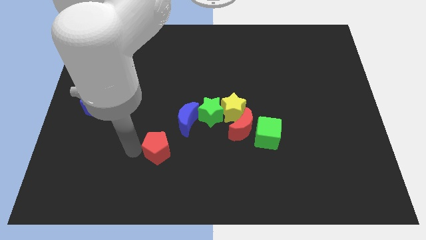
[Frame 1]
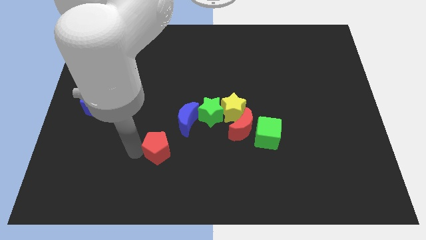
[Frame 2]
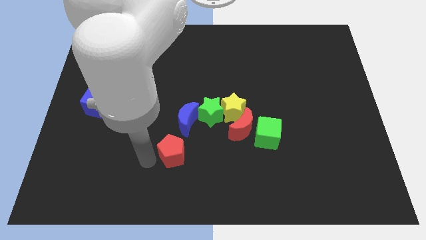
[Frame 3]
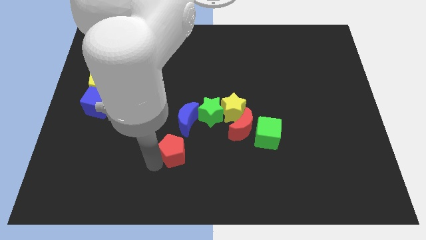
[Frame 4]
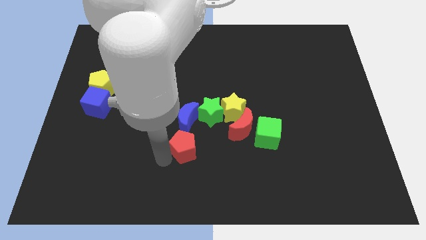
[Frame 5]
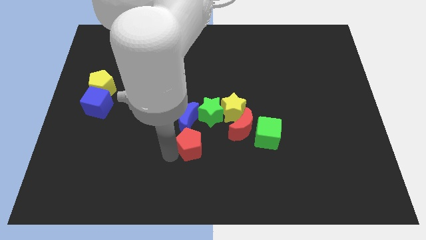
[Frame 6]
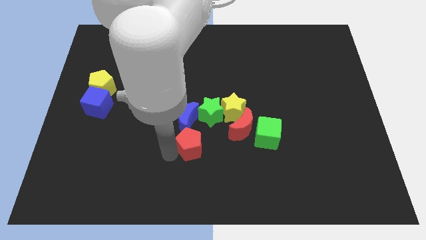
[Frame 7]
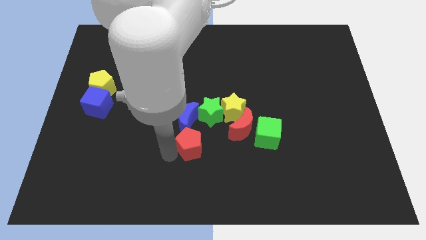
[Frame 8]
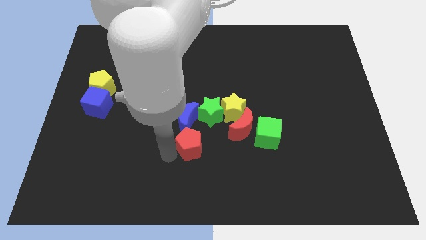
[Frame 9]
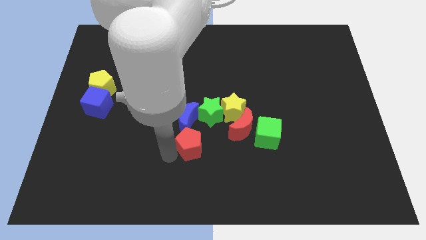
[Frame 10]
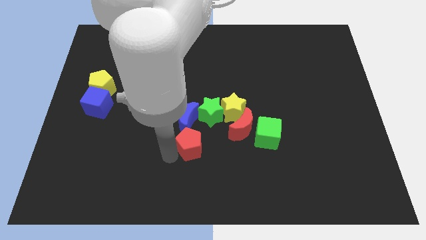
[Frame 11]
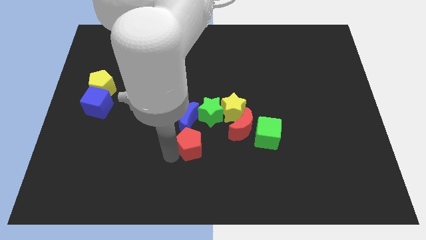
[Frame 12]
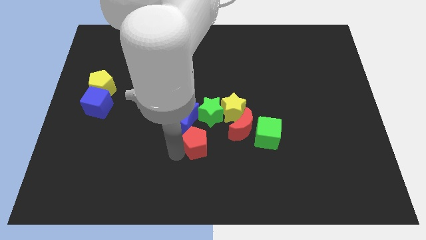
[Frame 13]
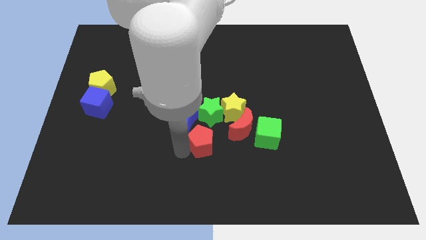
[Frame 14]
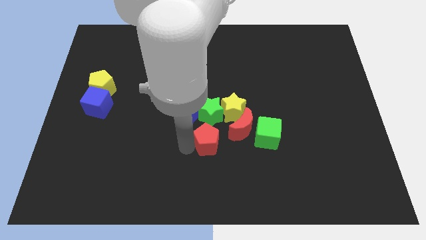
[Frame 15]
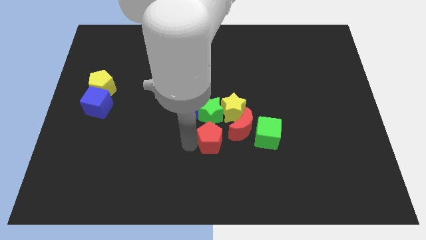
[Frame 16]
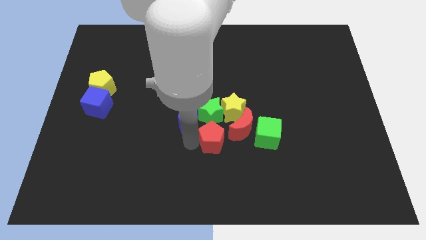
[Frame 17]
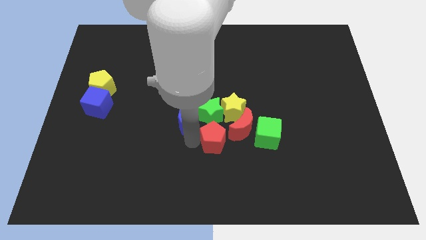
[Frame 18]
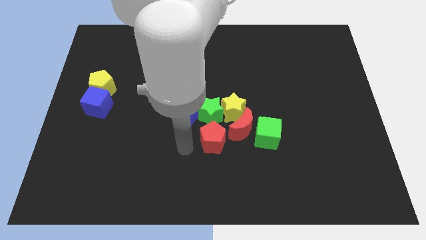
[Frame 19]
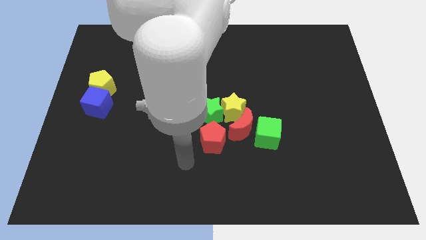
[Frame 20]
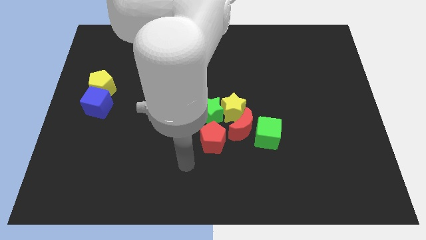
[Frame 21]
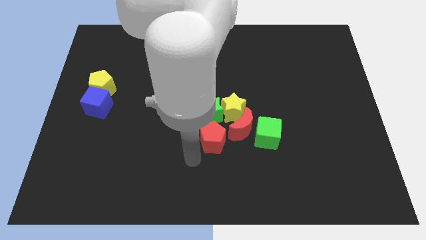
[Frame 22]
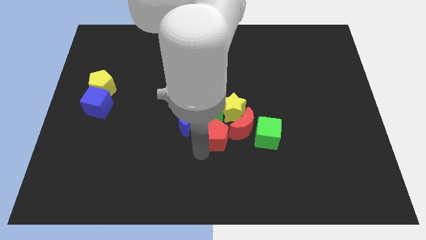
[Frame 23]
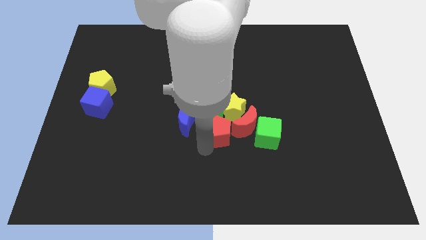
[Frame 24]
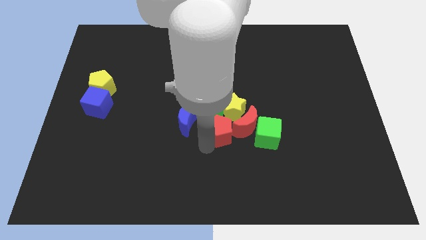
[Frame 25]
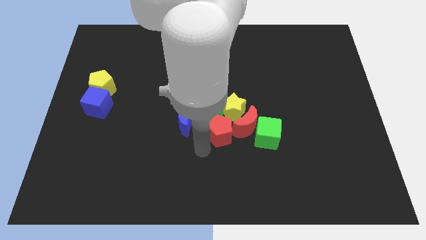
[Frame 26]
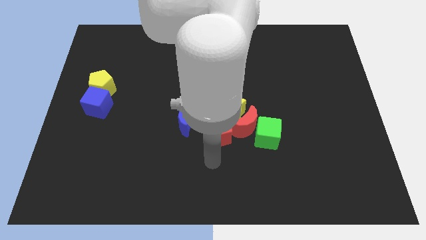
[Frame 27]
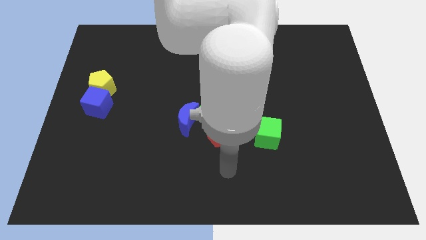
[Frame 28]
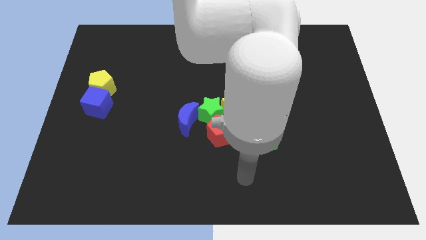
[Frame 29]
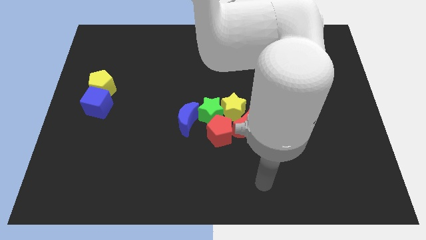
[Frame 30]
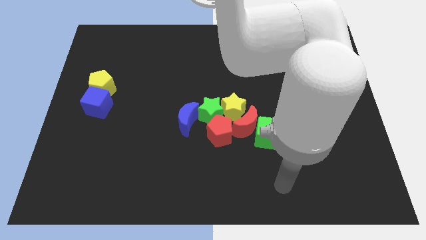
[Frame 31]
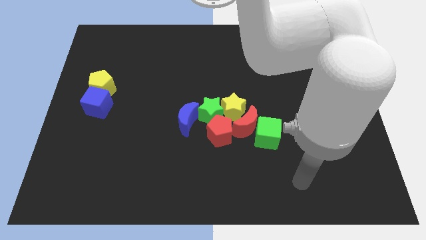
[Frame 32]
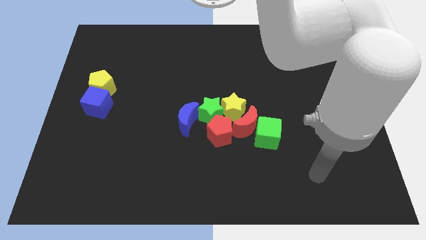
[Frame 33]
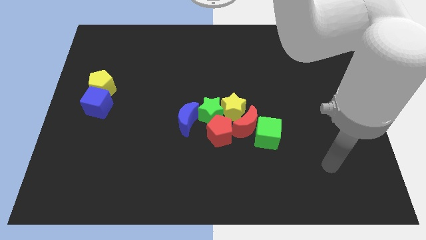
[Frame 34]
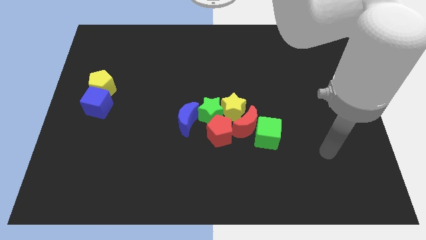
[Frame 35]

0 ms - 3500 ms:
move the red pentagon towards the group of blocks

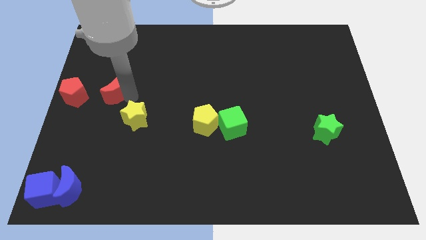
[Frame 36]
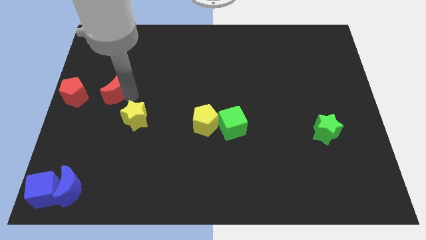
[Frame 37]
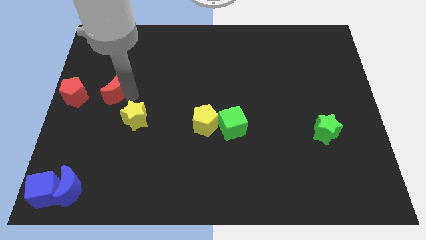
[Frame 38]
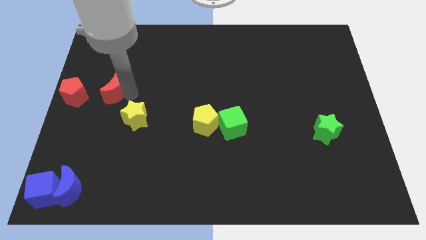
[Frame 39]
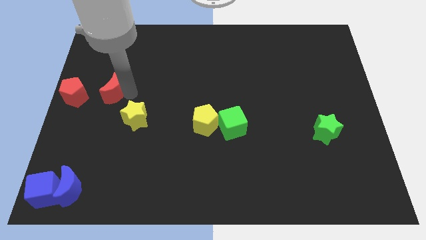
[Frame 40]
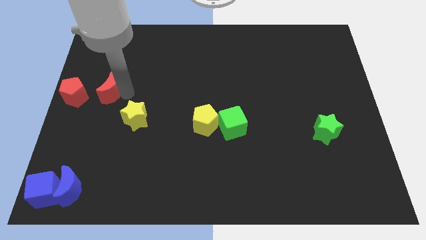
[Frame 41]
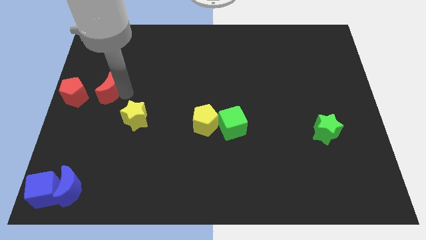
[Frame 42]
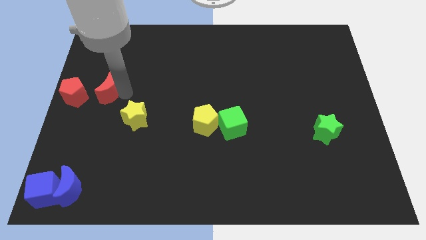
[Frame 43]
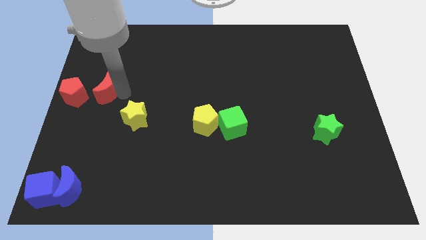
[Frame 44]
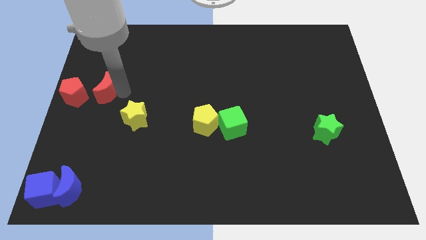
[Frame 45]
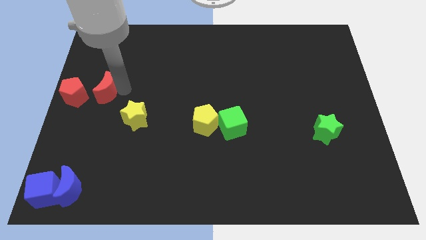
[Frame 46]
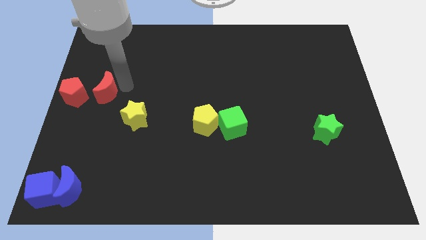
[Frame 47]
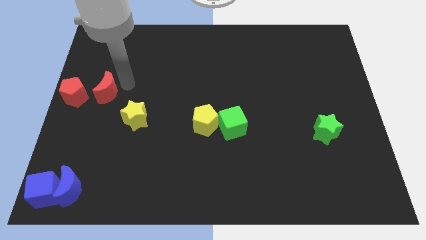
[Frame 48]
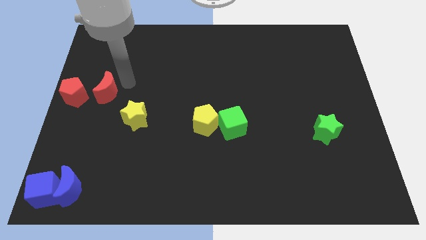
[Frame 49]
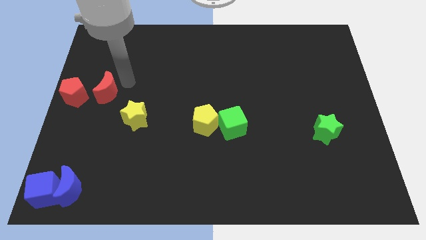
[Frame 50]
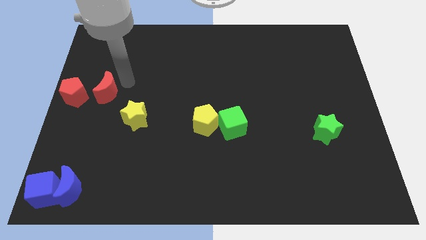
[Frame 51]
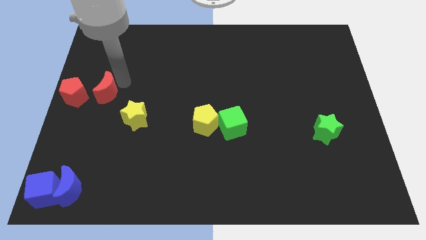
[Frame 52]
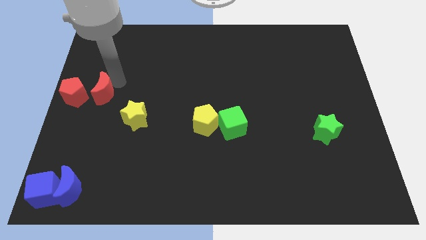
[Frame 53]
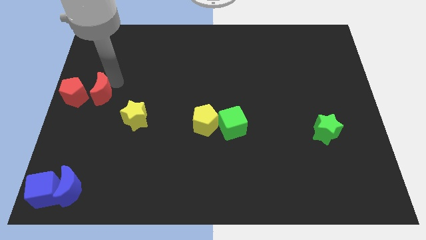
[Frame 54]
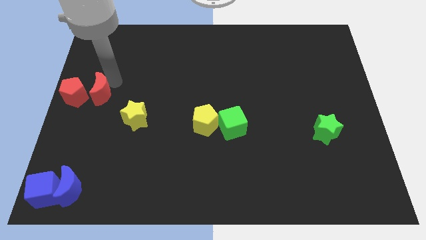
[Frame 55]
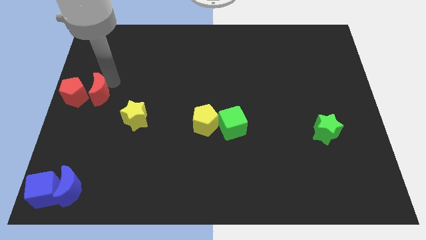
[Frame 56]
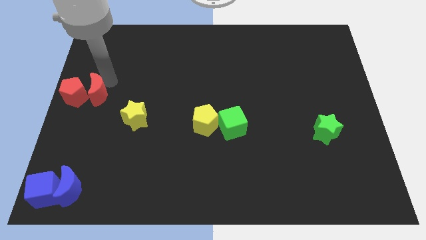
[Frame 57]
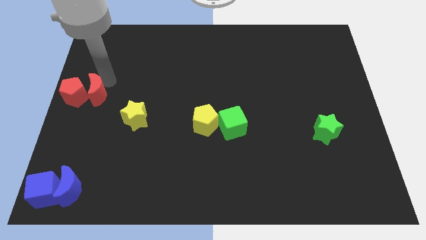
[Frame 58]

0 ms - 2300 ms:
place the red crescent towards the right side of the pentagon

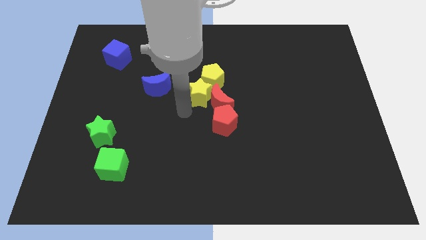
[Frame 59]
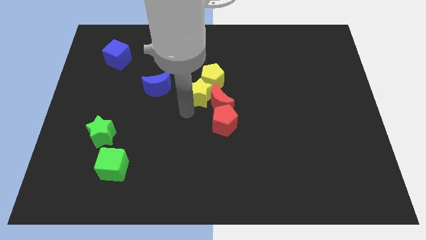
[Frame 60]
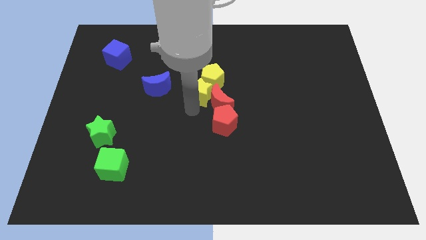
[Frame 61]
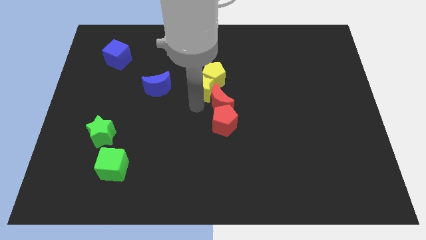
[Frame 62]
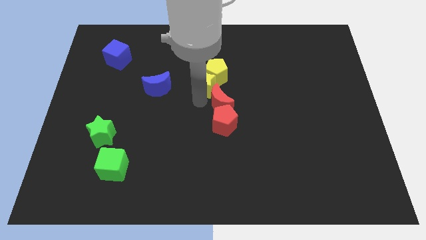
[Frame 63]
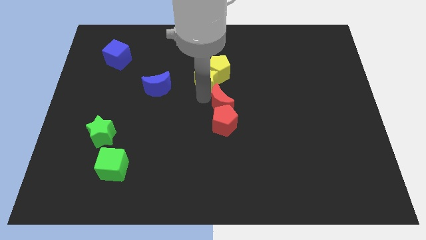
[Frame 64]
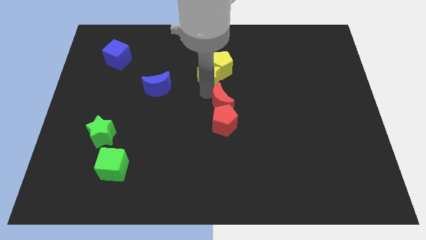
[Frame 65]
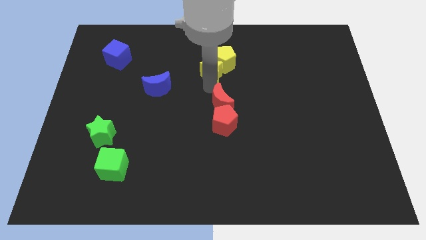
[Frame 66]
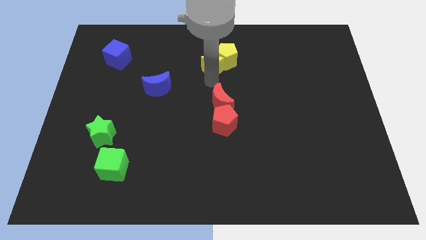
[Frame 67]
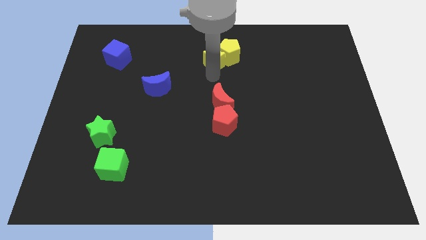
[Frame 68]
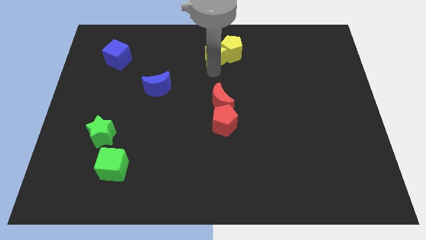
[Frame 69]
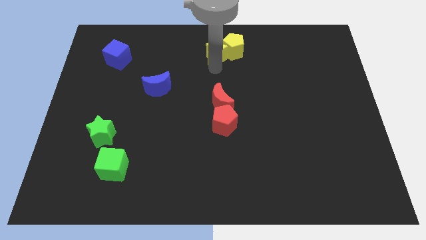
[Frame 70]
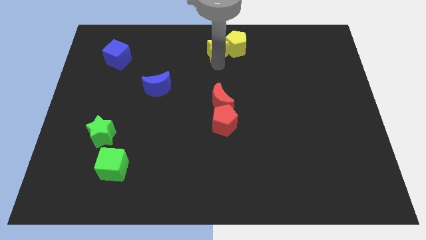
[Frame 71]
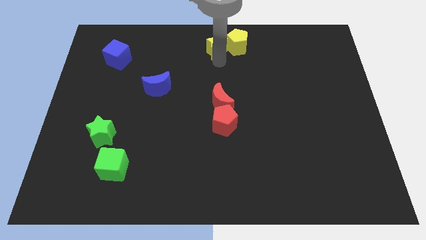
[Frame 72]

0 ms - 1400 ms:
move the yellow blocks to the top of the board

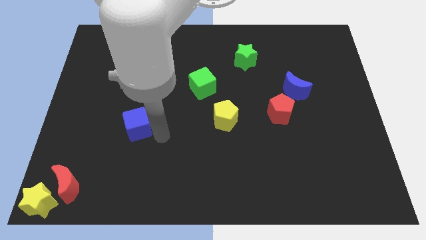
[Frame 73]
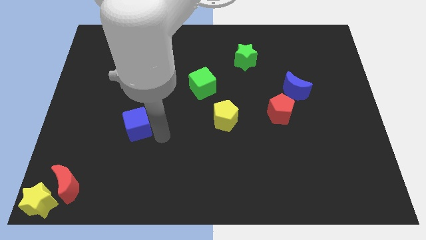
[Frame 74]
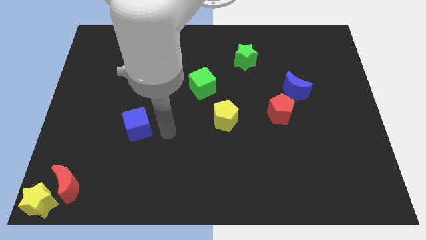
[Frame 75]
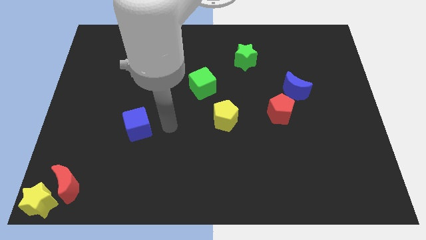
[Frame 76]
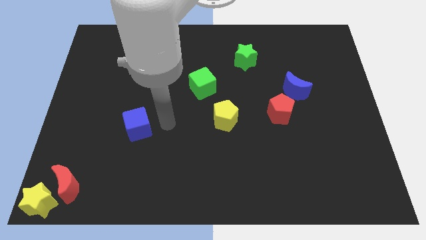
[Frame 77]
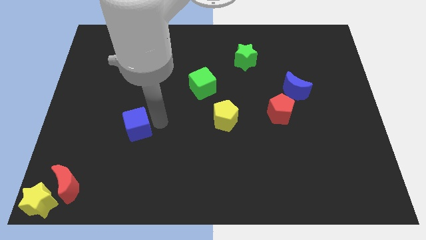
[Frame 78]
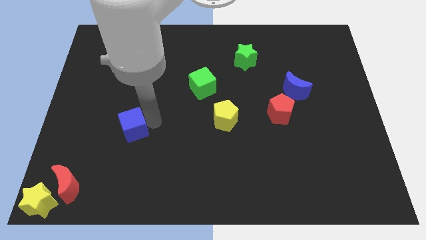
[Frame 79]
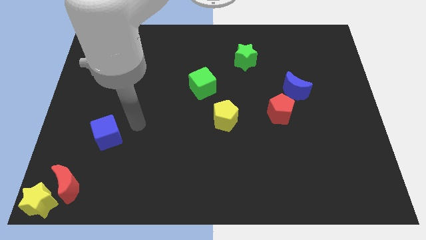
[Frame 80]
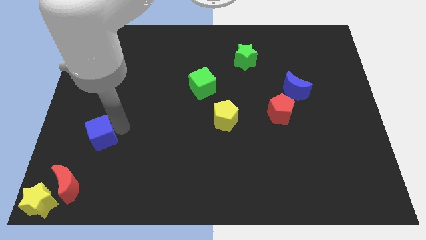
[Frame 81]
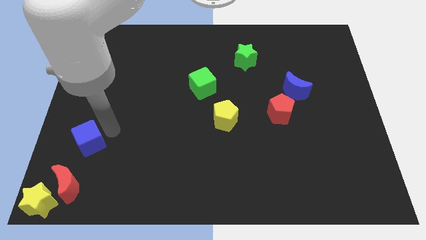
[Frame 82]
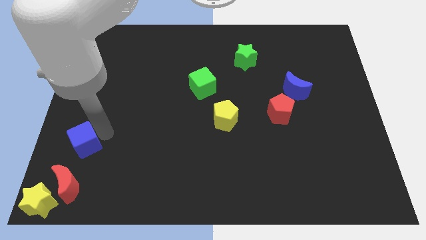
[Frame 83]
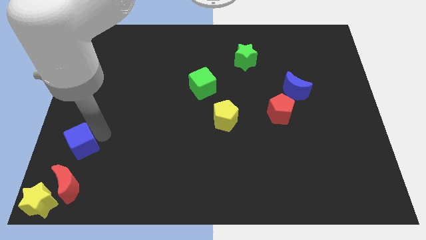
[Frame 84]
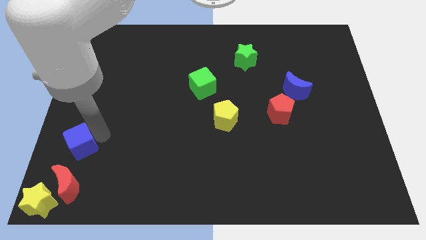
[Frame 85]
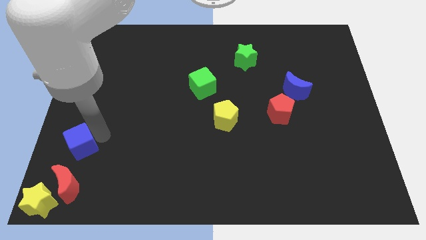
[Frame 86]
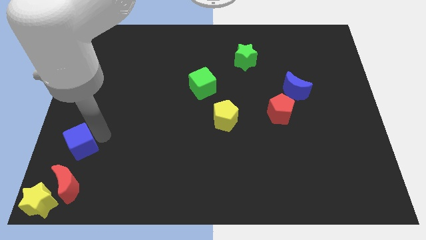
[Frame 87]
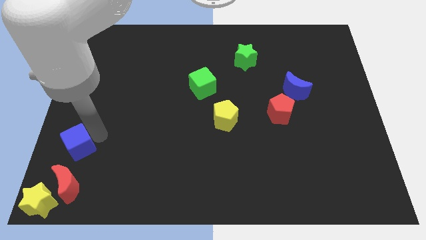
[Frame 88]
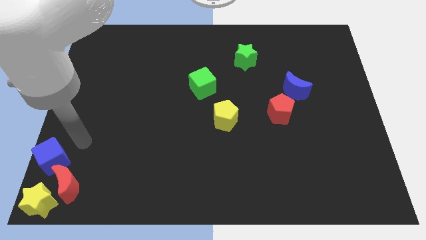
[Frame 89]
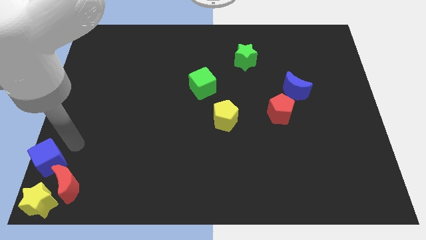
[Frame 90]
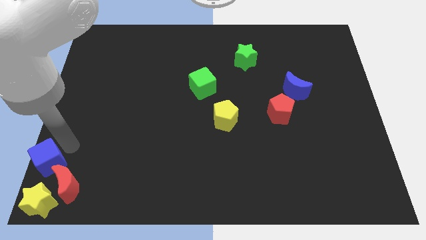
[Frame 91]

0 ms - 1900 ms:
place the blue cube above the yellow star
